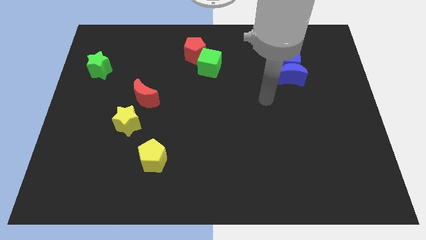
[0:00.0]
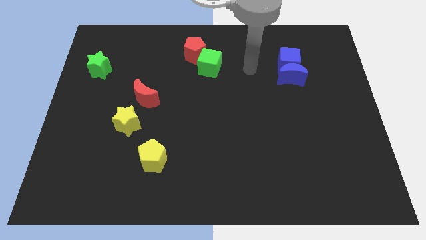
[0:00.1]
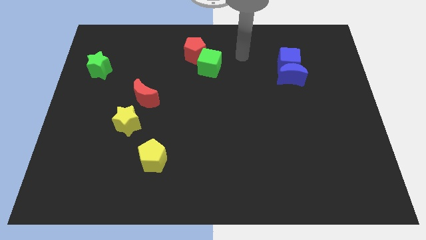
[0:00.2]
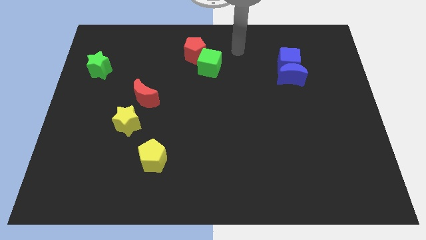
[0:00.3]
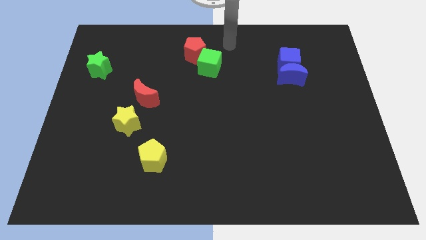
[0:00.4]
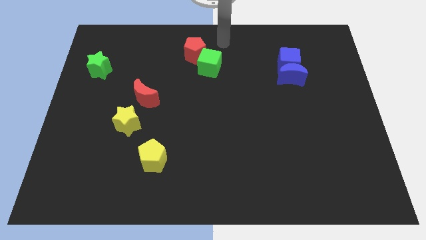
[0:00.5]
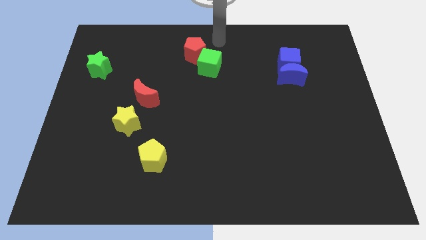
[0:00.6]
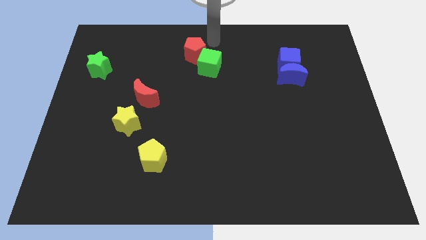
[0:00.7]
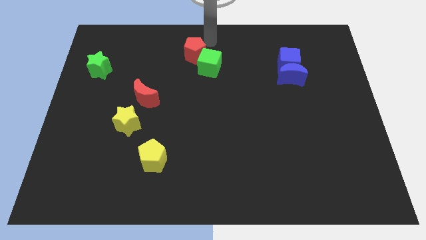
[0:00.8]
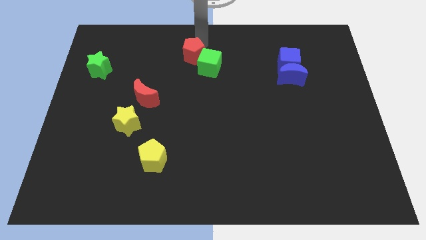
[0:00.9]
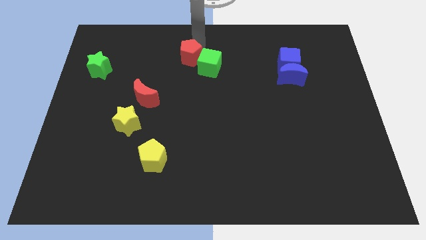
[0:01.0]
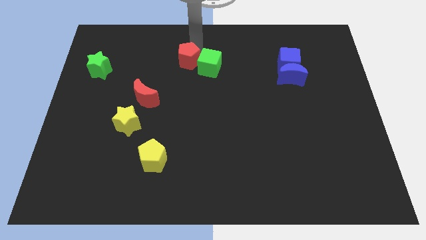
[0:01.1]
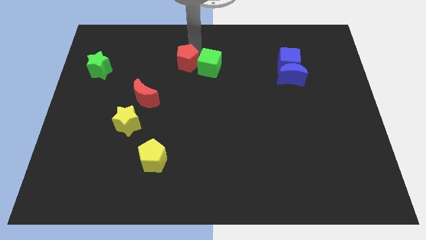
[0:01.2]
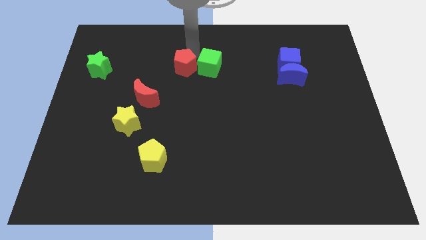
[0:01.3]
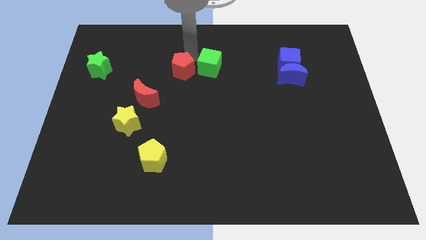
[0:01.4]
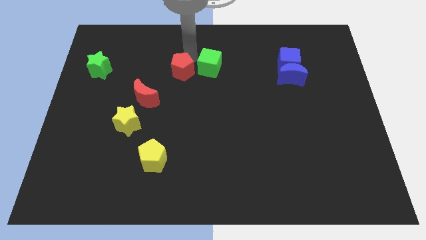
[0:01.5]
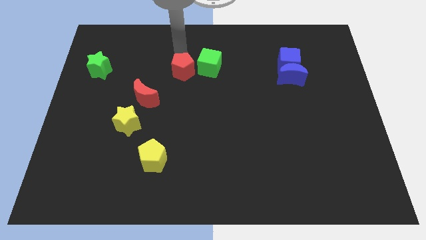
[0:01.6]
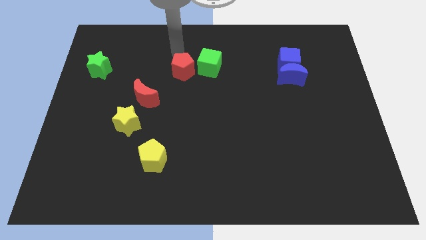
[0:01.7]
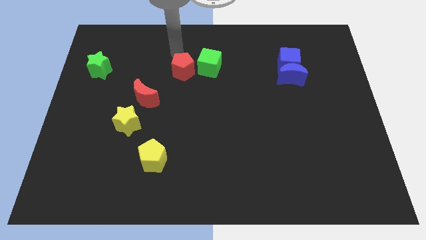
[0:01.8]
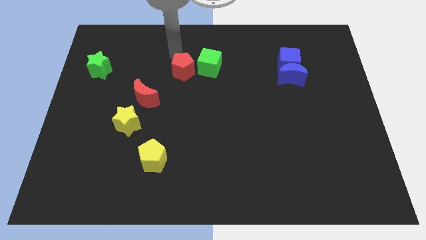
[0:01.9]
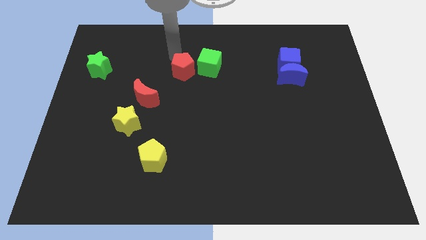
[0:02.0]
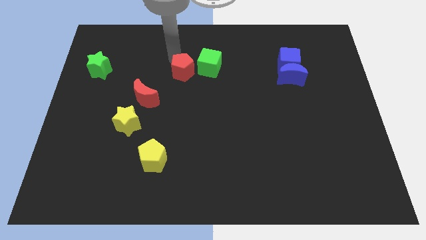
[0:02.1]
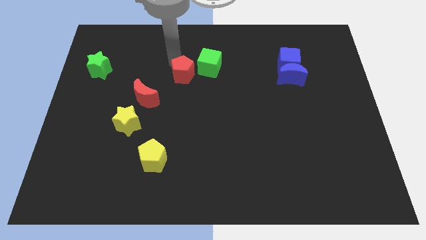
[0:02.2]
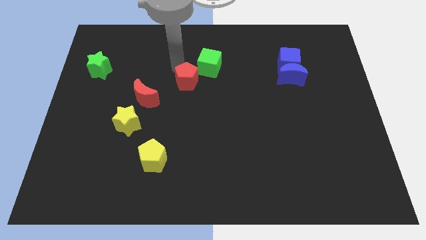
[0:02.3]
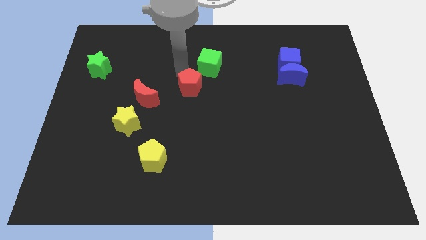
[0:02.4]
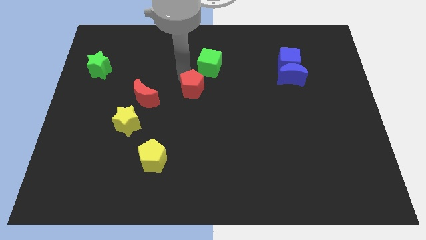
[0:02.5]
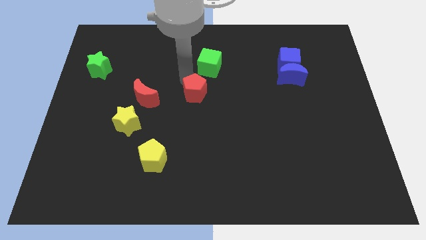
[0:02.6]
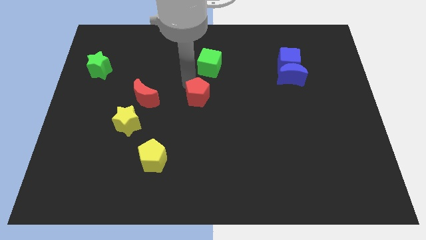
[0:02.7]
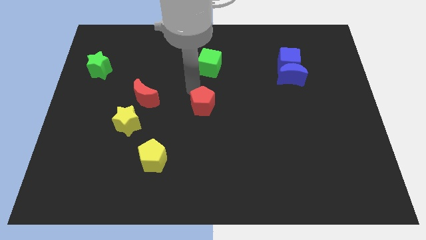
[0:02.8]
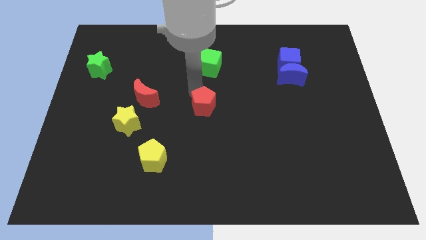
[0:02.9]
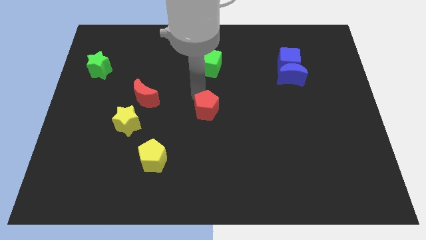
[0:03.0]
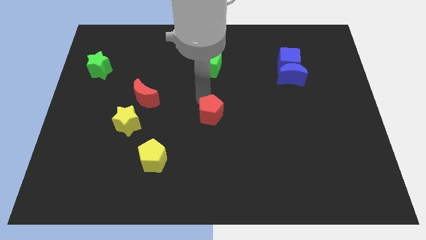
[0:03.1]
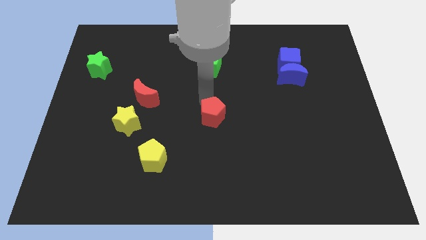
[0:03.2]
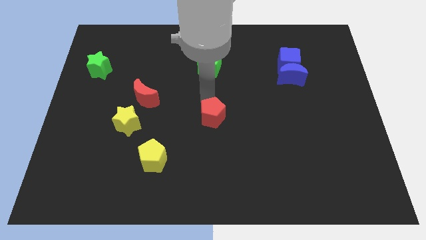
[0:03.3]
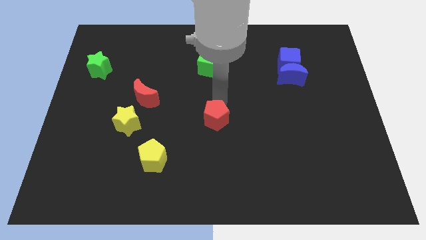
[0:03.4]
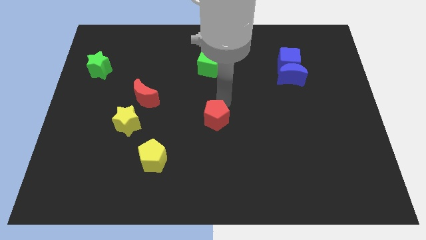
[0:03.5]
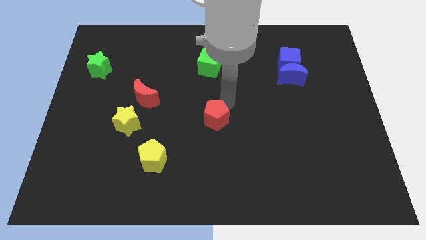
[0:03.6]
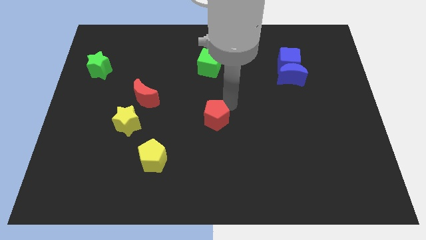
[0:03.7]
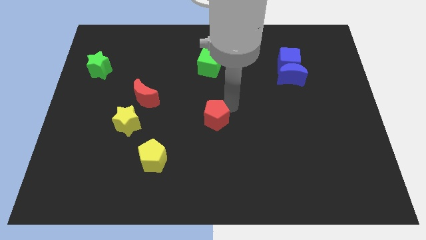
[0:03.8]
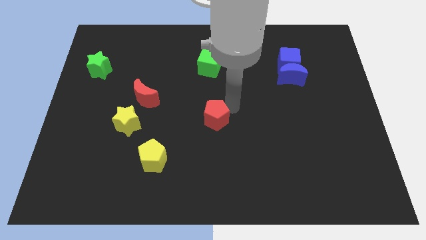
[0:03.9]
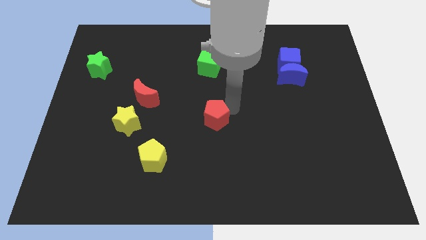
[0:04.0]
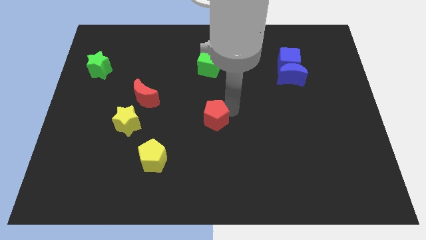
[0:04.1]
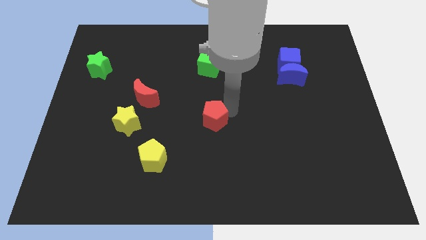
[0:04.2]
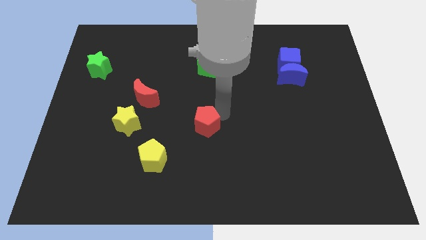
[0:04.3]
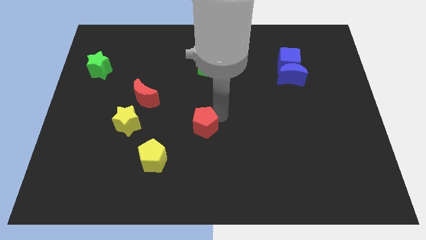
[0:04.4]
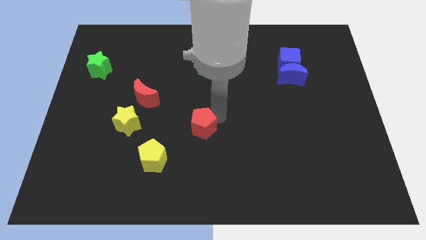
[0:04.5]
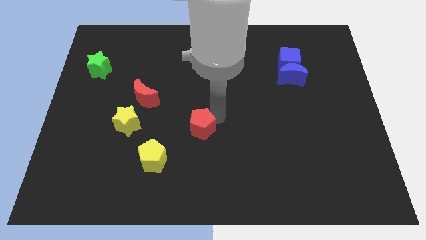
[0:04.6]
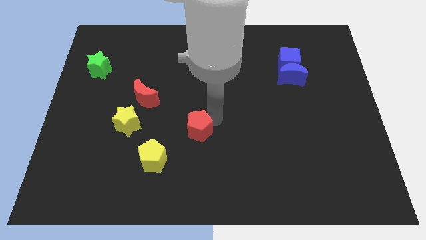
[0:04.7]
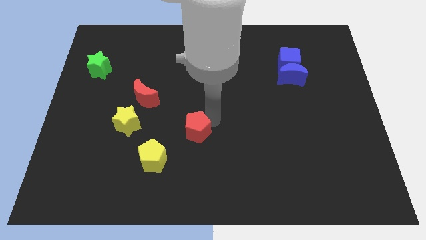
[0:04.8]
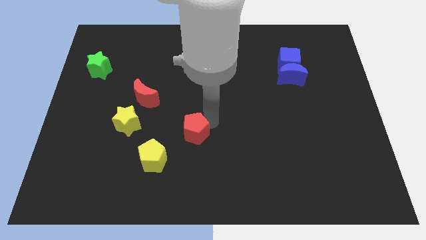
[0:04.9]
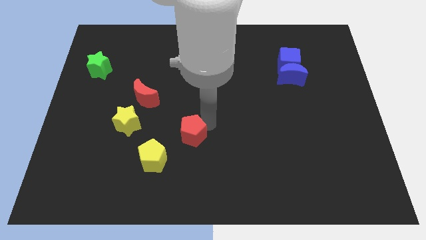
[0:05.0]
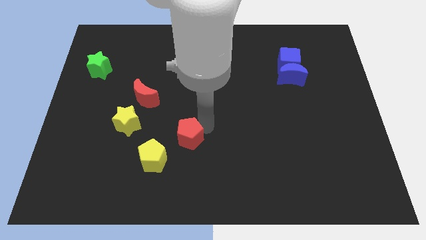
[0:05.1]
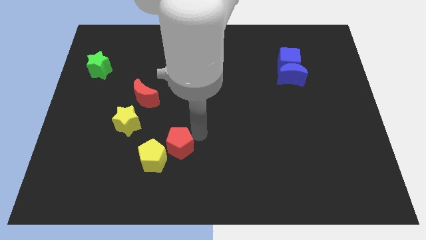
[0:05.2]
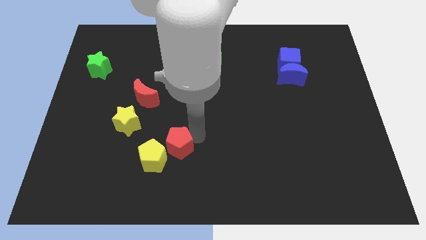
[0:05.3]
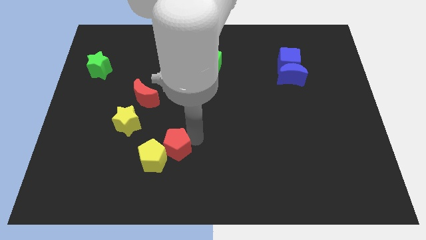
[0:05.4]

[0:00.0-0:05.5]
slide the red pentagon close to the yellow pentagon

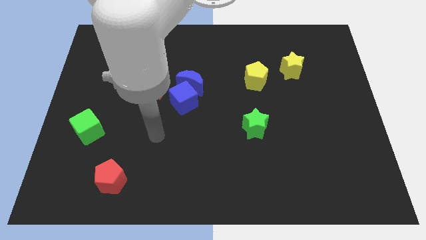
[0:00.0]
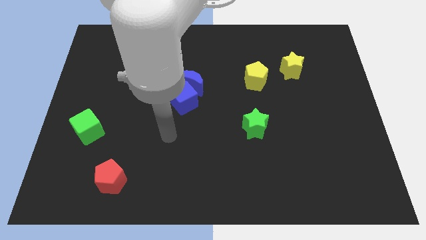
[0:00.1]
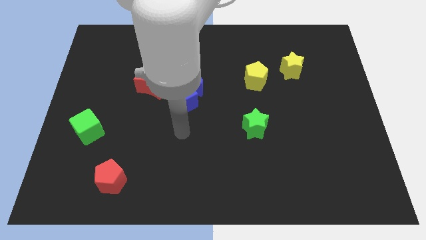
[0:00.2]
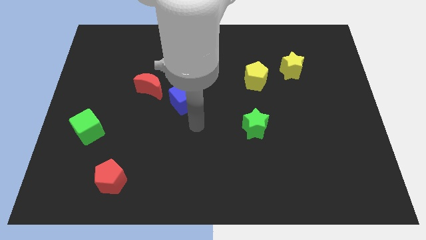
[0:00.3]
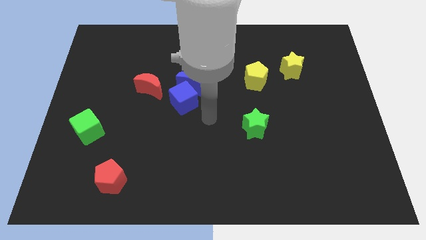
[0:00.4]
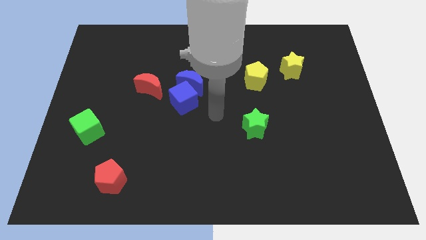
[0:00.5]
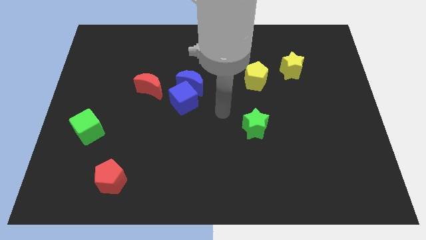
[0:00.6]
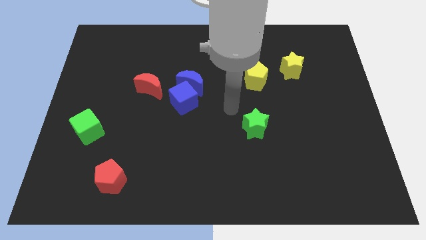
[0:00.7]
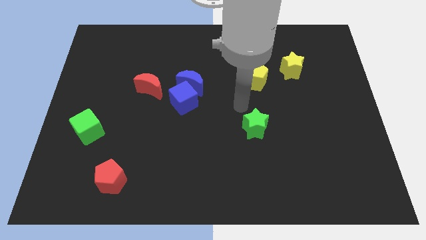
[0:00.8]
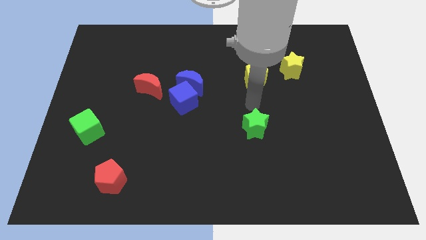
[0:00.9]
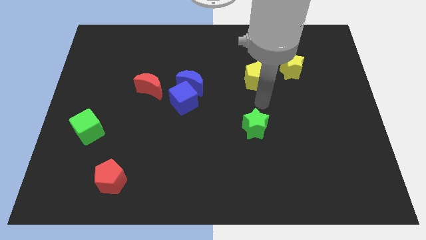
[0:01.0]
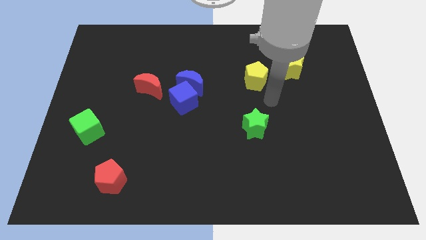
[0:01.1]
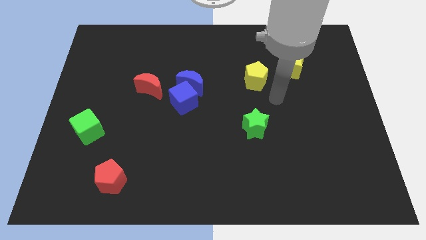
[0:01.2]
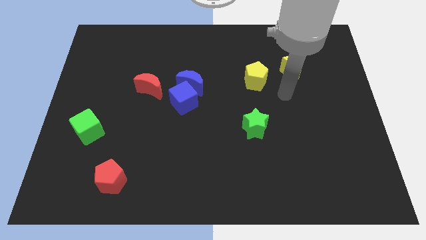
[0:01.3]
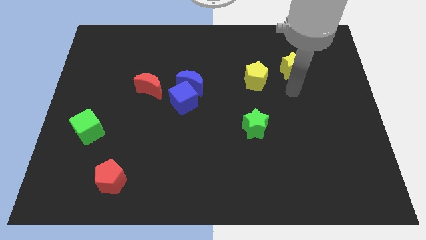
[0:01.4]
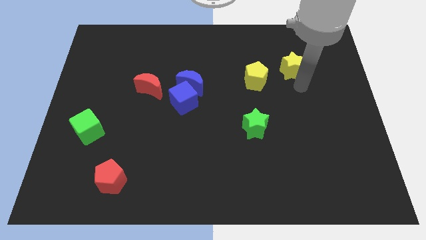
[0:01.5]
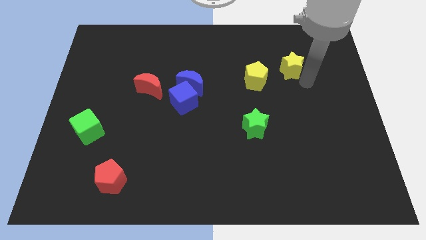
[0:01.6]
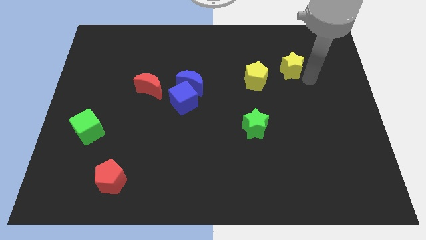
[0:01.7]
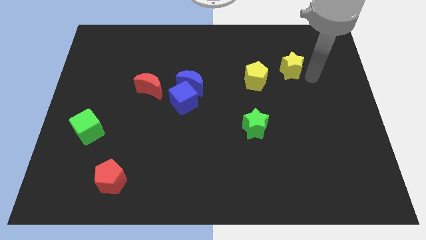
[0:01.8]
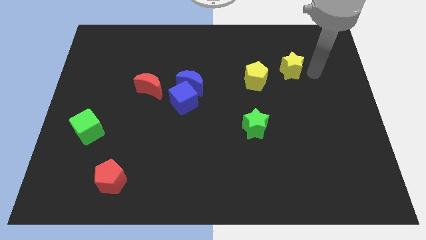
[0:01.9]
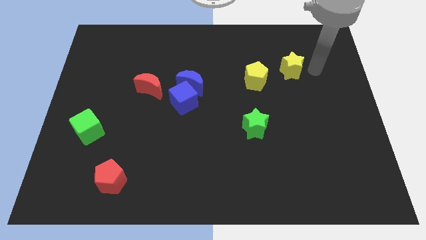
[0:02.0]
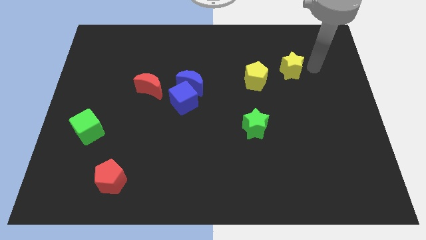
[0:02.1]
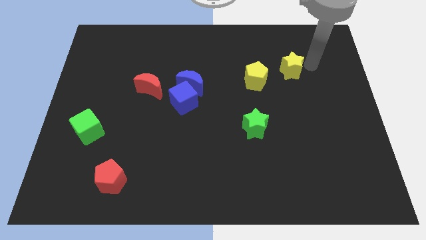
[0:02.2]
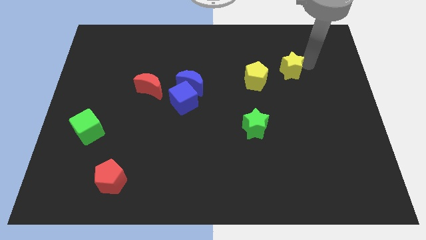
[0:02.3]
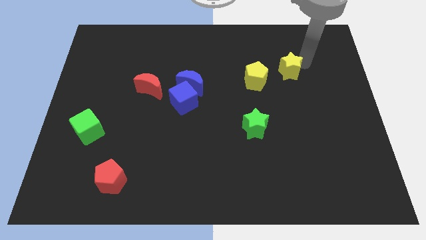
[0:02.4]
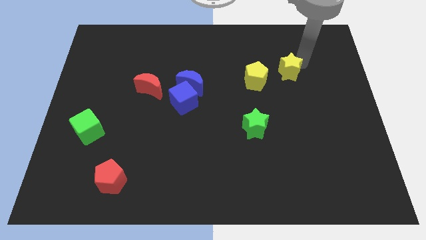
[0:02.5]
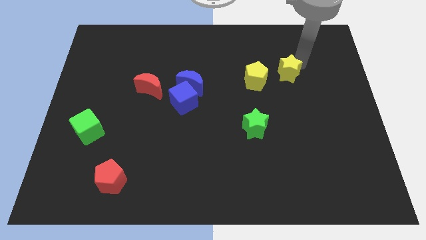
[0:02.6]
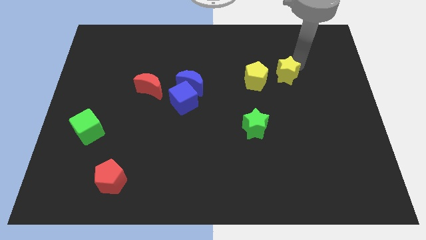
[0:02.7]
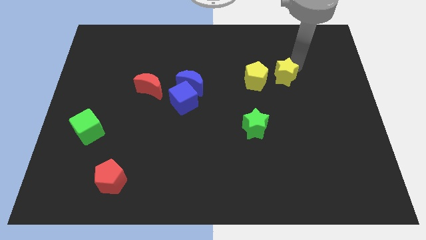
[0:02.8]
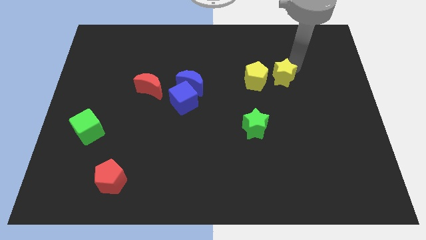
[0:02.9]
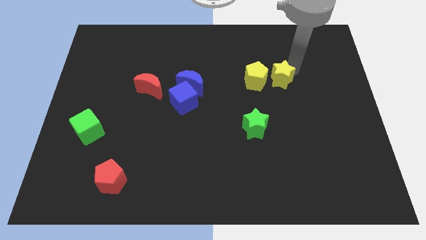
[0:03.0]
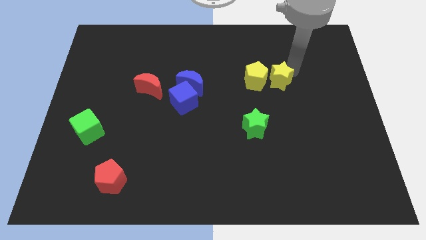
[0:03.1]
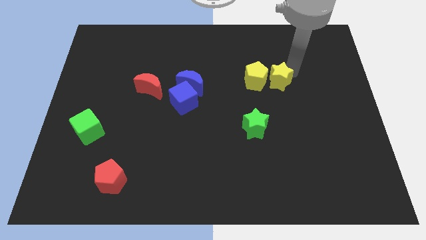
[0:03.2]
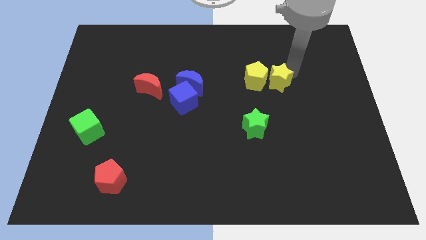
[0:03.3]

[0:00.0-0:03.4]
move the yellow star close to the yellow pentagon
